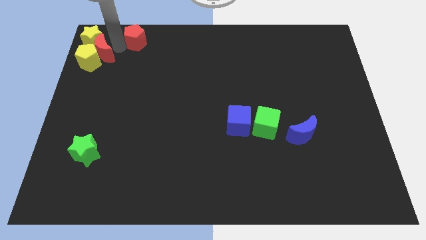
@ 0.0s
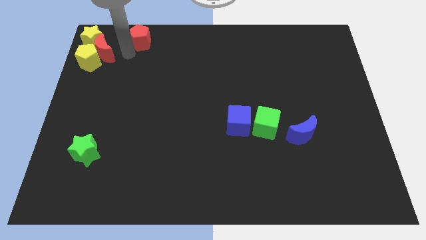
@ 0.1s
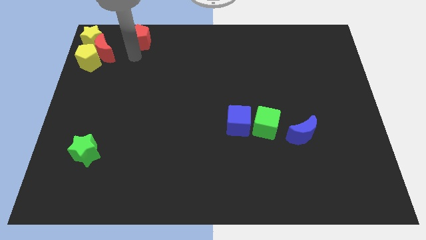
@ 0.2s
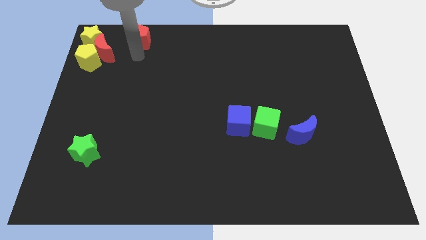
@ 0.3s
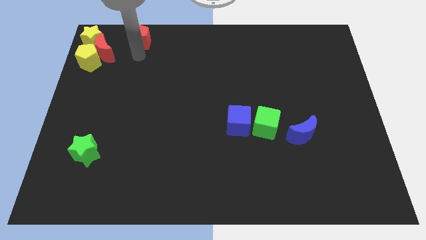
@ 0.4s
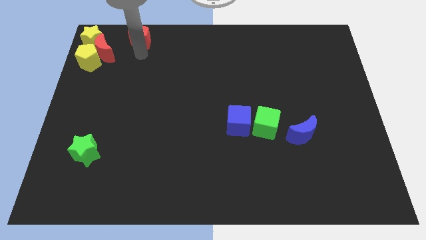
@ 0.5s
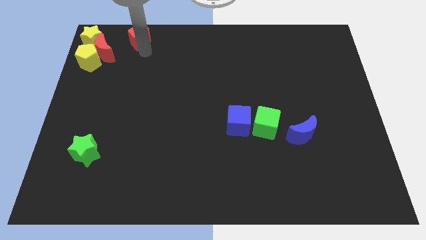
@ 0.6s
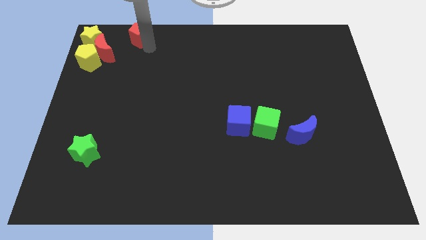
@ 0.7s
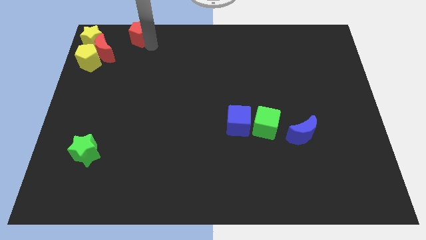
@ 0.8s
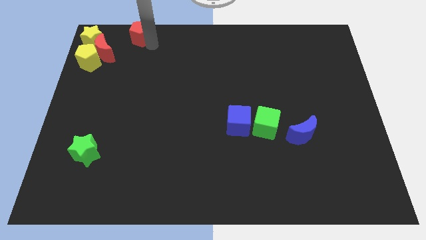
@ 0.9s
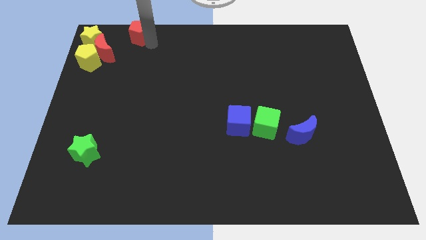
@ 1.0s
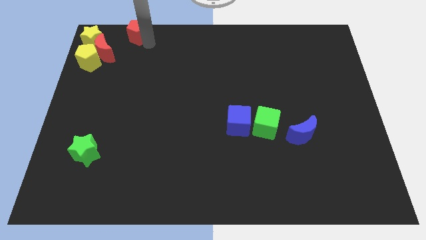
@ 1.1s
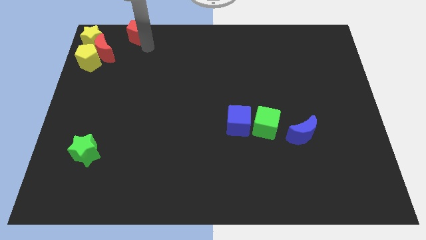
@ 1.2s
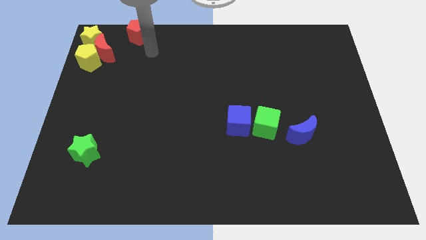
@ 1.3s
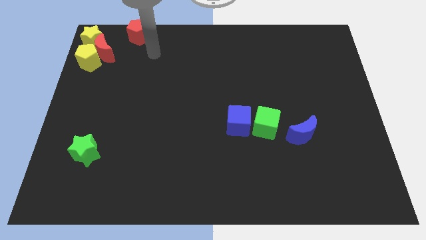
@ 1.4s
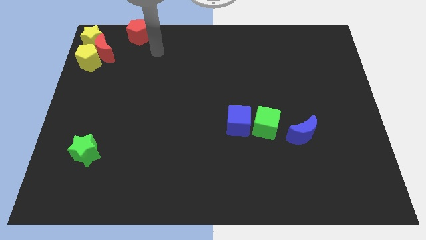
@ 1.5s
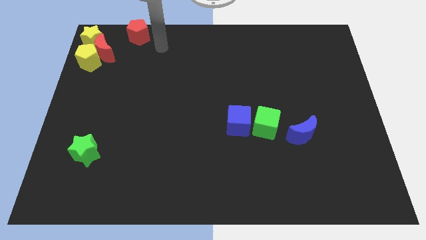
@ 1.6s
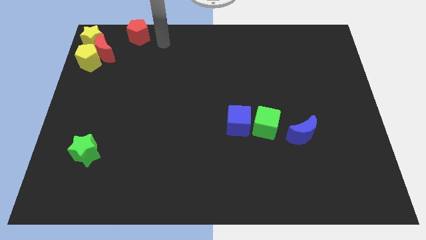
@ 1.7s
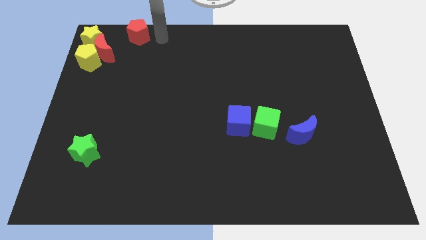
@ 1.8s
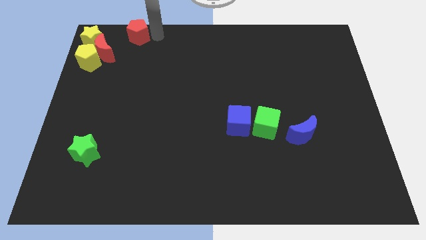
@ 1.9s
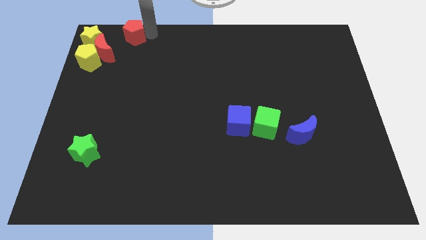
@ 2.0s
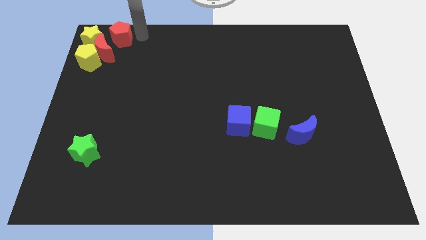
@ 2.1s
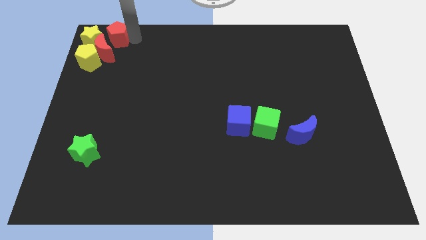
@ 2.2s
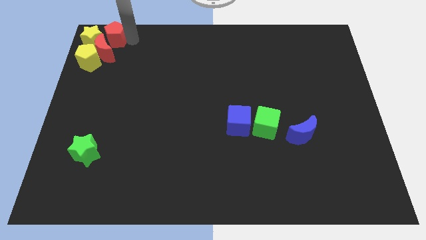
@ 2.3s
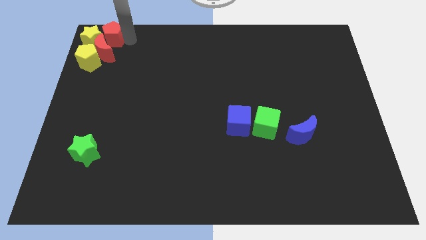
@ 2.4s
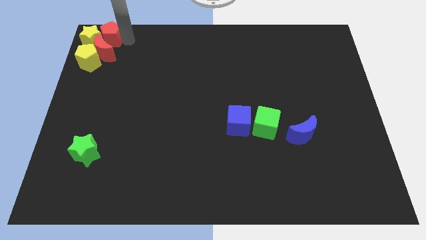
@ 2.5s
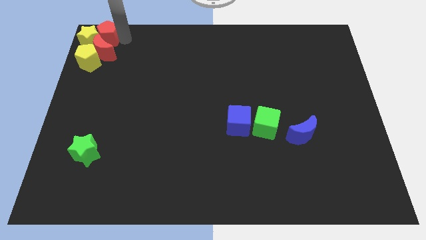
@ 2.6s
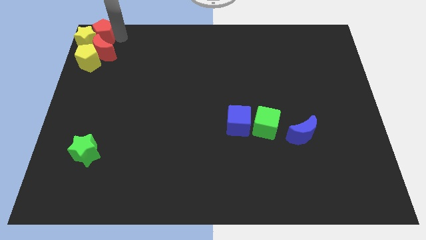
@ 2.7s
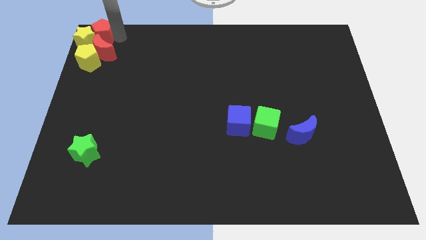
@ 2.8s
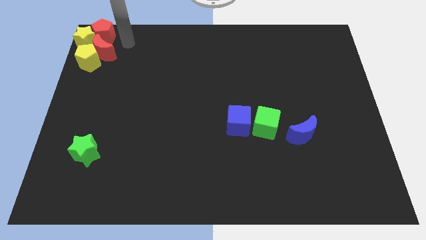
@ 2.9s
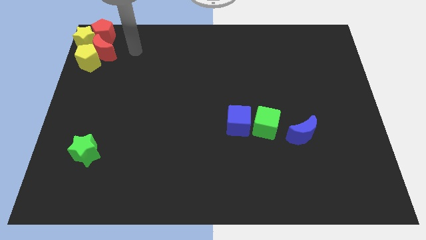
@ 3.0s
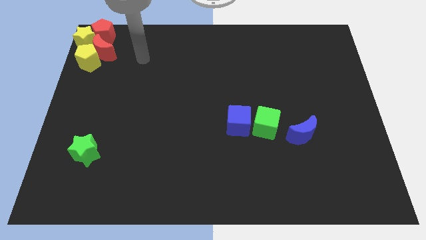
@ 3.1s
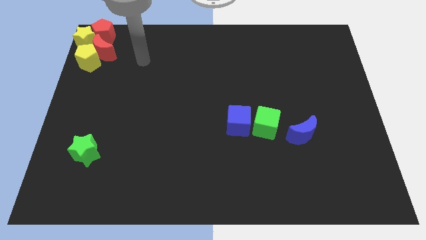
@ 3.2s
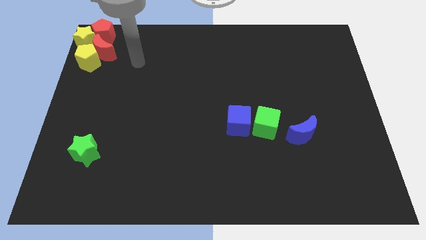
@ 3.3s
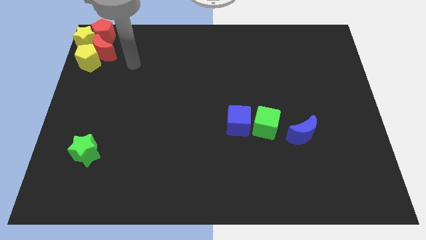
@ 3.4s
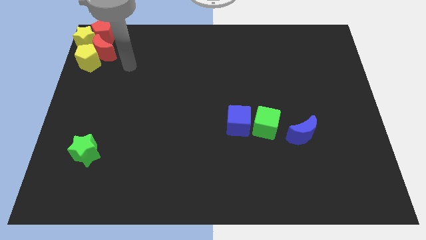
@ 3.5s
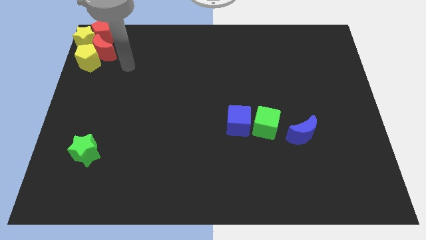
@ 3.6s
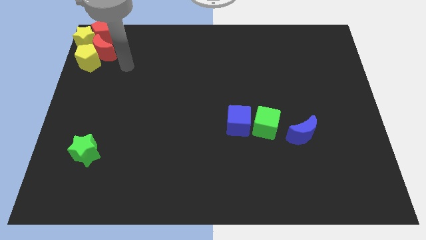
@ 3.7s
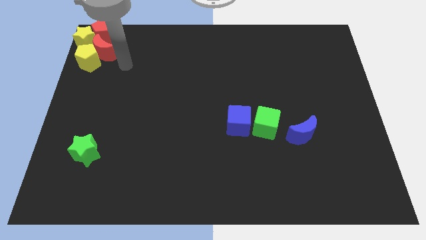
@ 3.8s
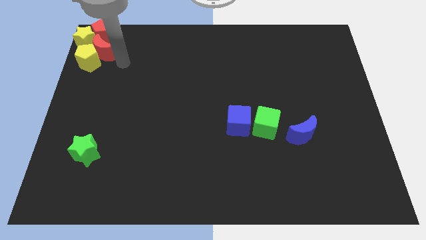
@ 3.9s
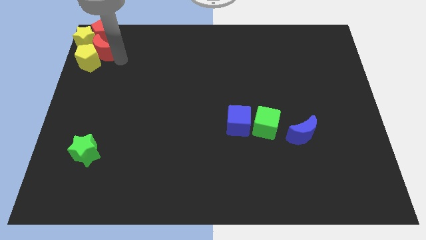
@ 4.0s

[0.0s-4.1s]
move the red pentagon into the yellow star

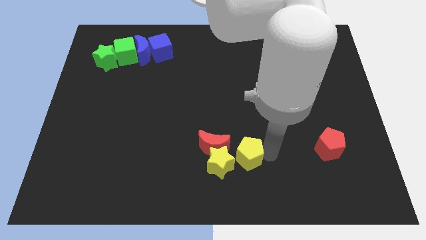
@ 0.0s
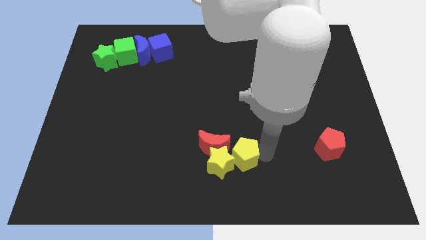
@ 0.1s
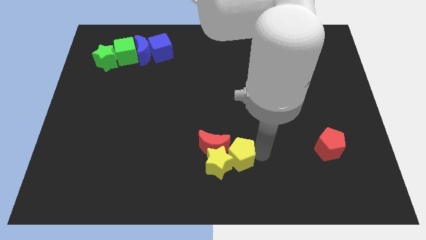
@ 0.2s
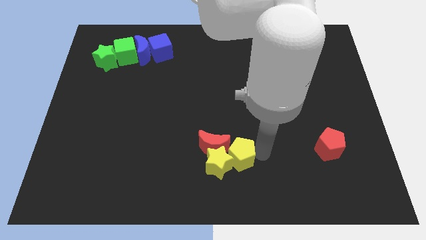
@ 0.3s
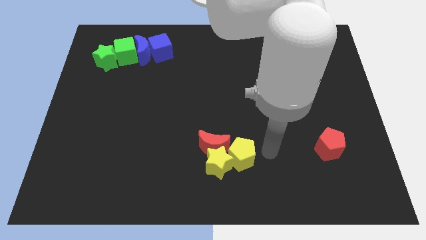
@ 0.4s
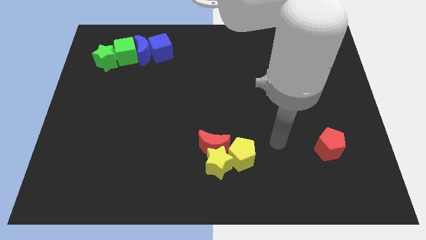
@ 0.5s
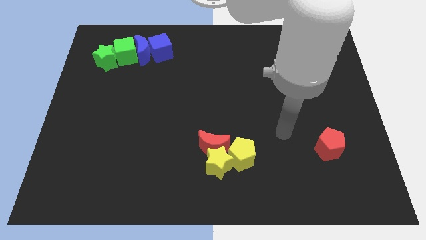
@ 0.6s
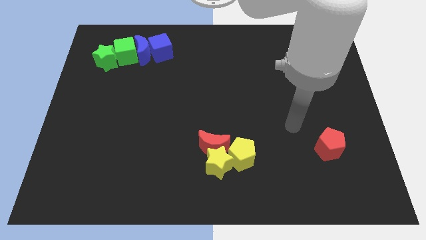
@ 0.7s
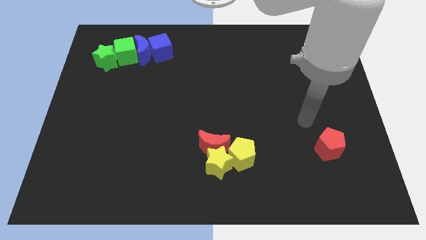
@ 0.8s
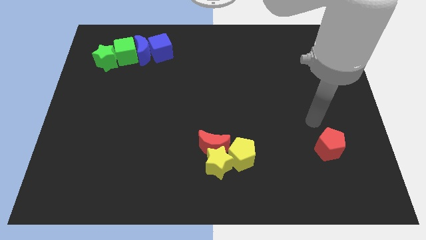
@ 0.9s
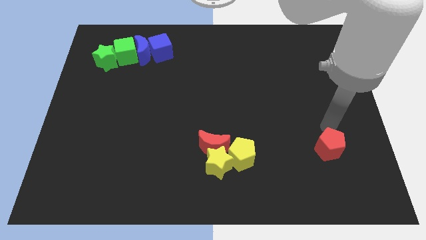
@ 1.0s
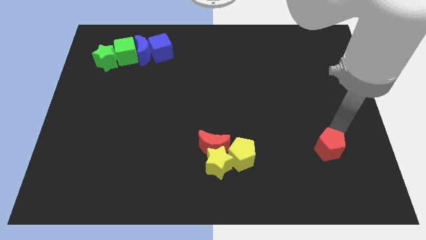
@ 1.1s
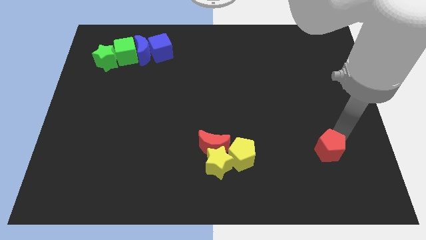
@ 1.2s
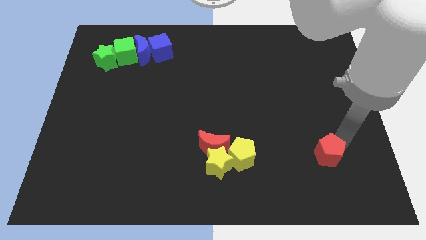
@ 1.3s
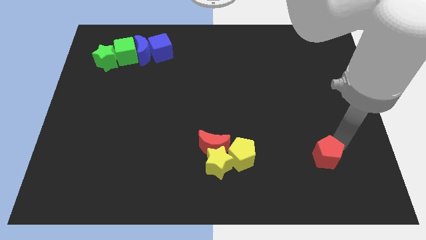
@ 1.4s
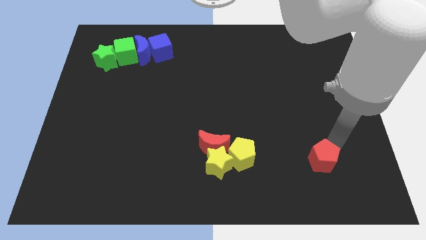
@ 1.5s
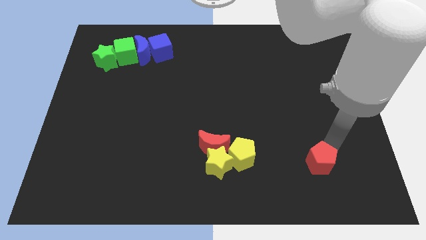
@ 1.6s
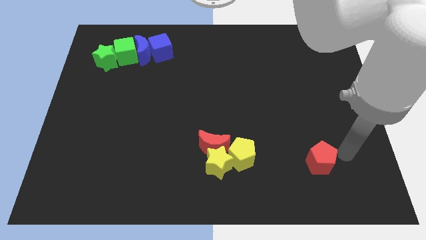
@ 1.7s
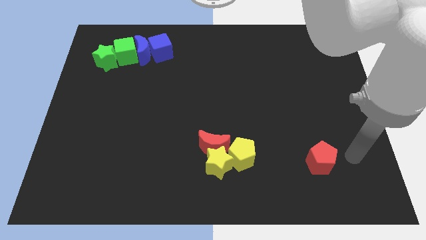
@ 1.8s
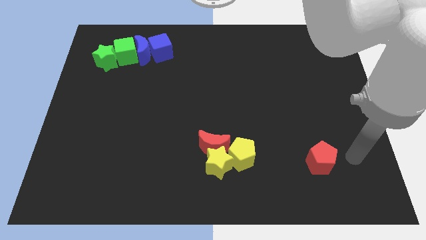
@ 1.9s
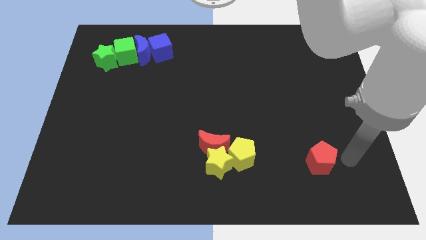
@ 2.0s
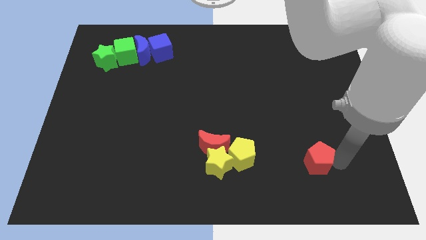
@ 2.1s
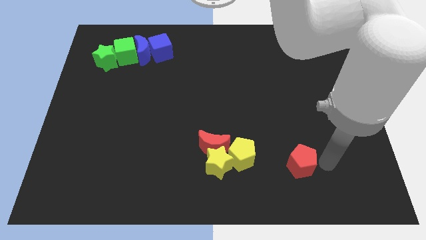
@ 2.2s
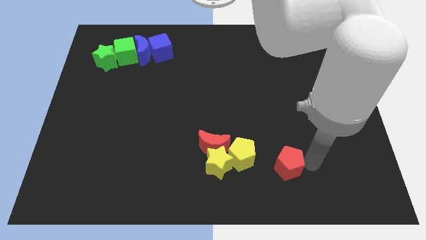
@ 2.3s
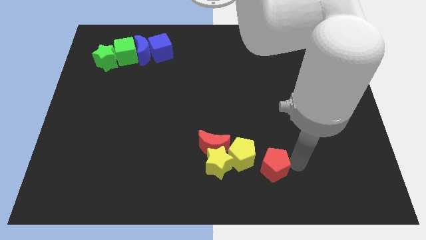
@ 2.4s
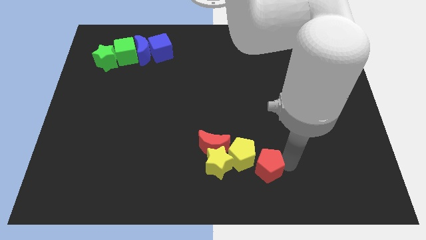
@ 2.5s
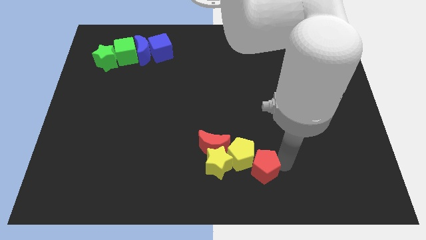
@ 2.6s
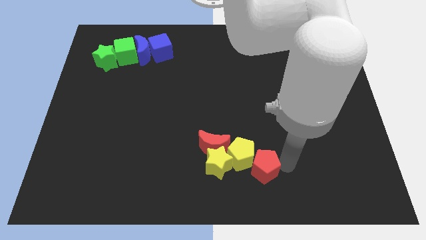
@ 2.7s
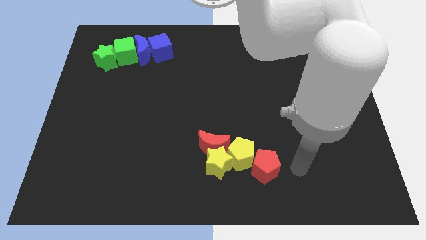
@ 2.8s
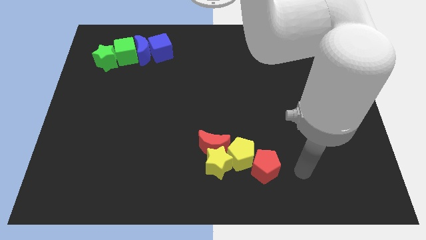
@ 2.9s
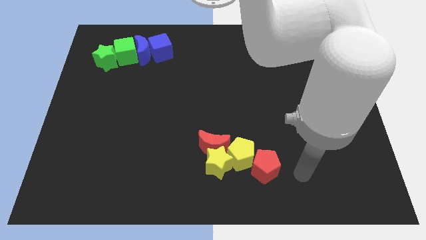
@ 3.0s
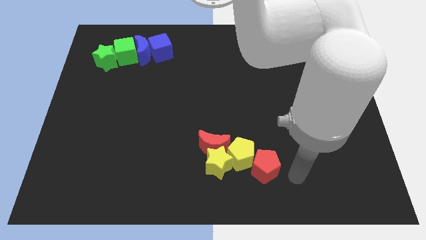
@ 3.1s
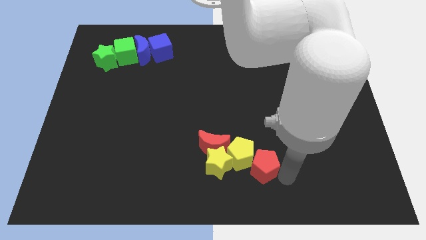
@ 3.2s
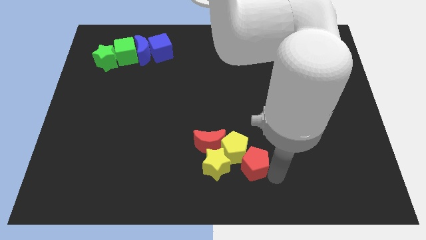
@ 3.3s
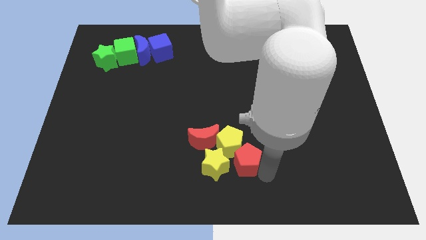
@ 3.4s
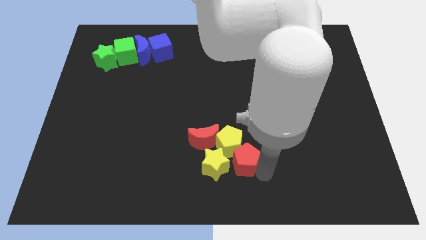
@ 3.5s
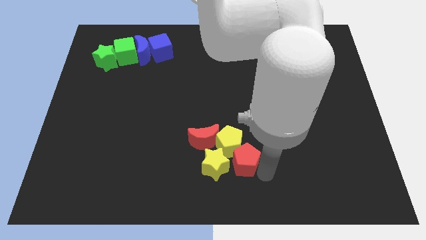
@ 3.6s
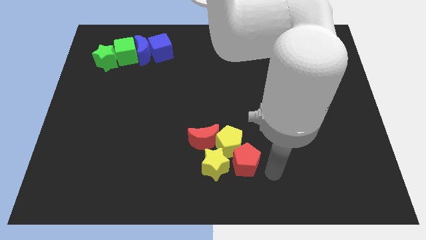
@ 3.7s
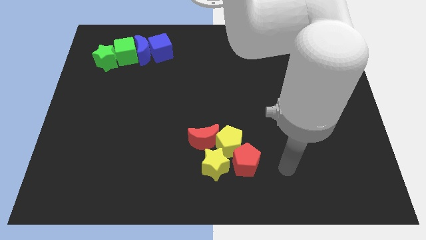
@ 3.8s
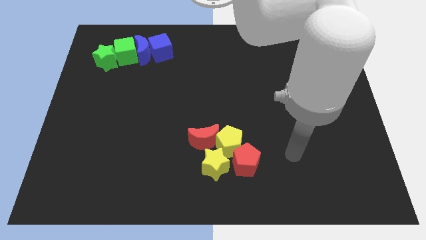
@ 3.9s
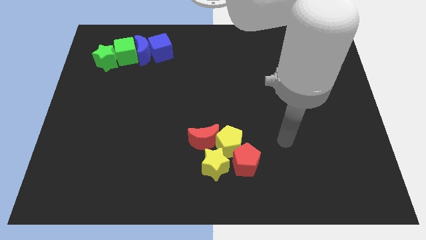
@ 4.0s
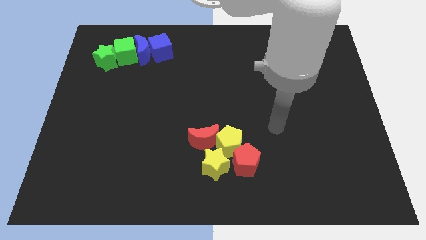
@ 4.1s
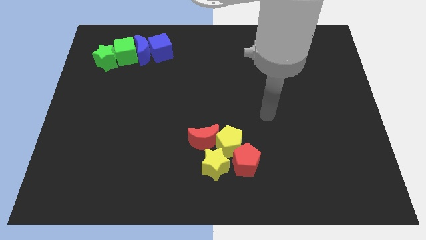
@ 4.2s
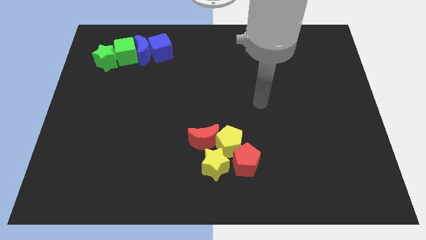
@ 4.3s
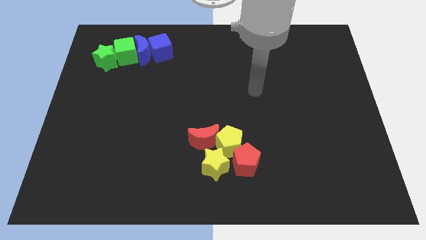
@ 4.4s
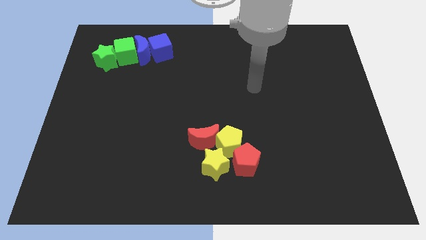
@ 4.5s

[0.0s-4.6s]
push the red pentagon into the group of blocks

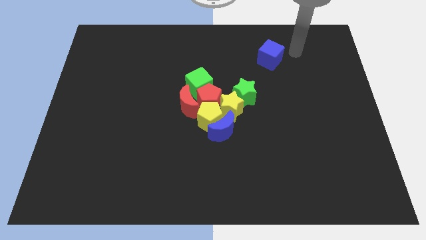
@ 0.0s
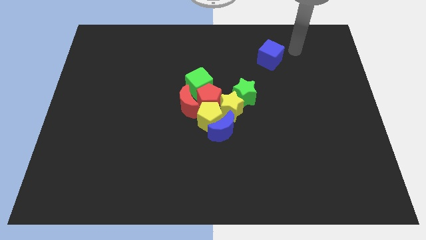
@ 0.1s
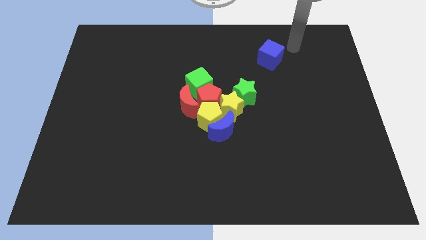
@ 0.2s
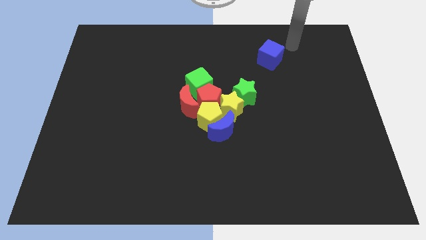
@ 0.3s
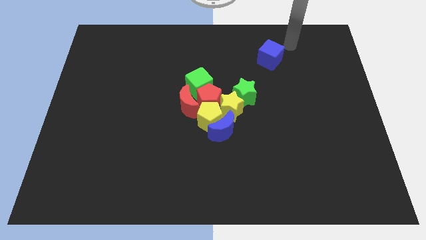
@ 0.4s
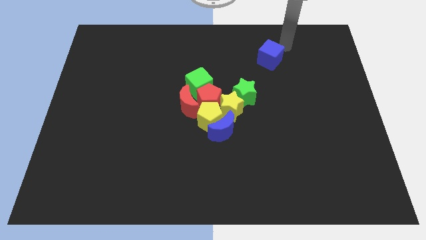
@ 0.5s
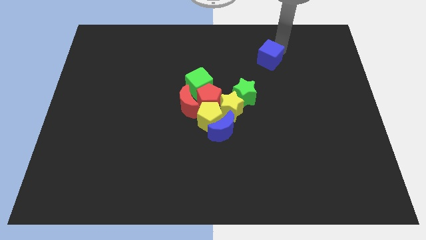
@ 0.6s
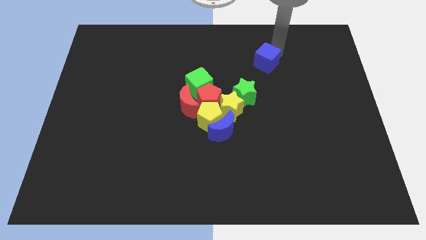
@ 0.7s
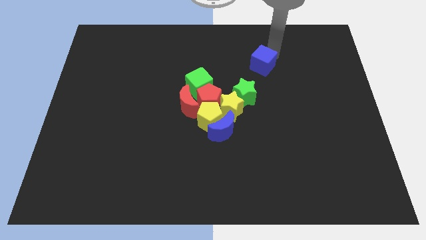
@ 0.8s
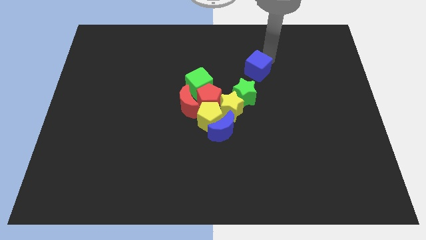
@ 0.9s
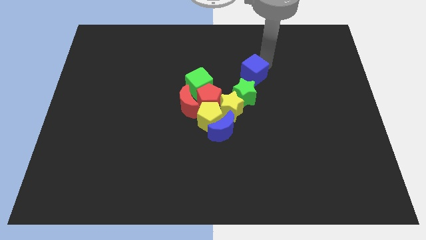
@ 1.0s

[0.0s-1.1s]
push blue cube right above green star
